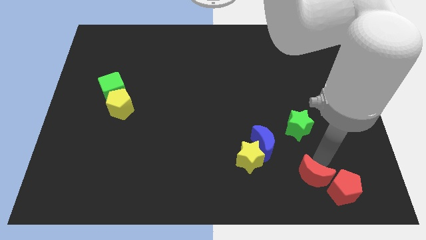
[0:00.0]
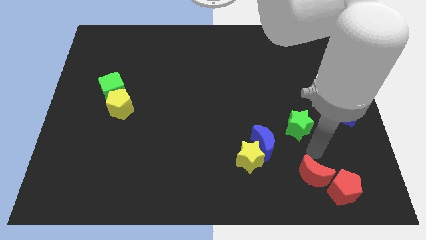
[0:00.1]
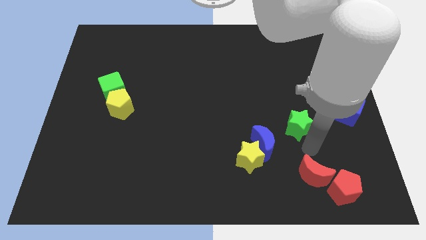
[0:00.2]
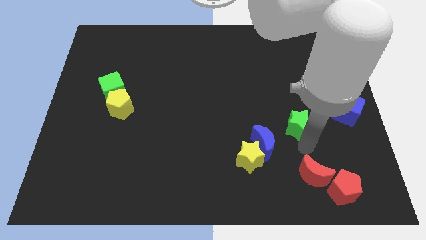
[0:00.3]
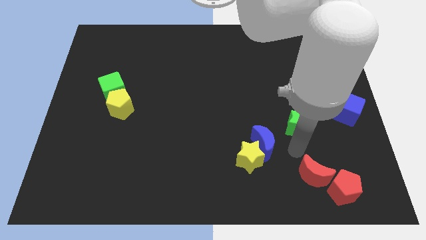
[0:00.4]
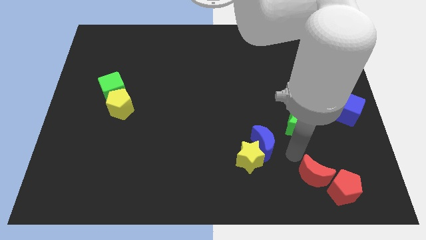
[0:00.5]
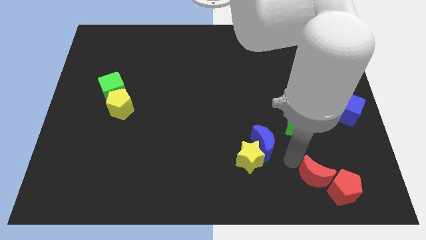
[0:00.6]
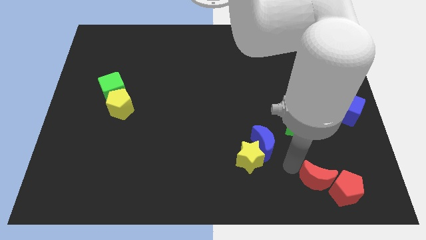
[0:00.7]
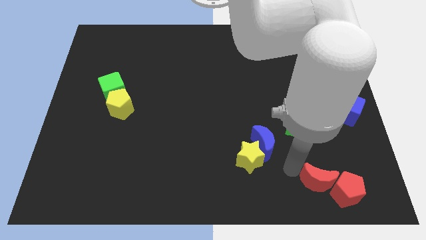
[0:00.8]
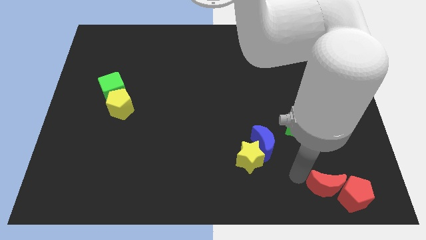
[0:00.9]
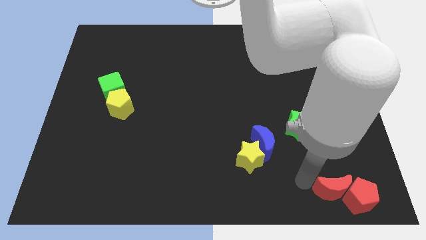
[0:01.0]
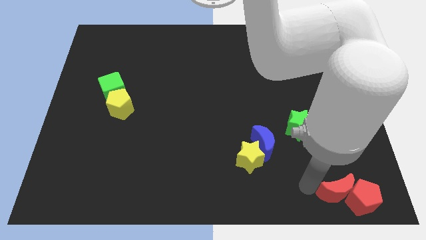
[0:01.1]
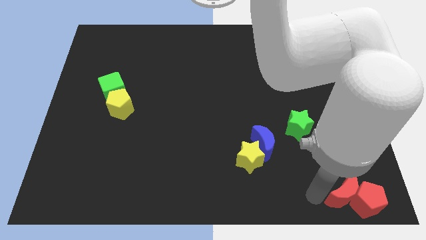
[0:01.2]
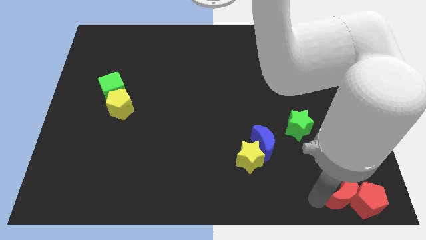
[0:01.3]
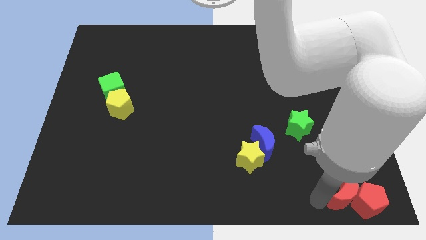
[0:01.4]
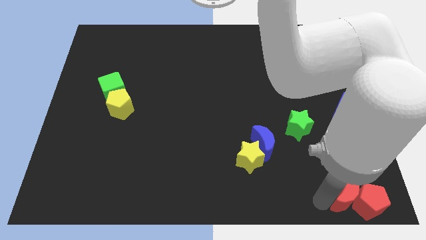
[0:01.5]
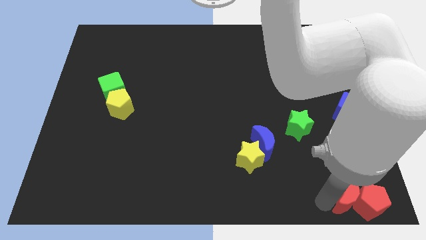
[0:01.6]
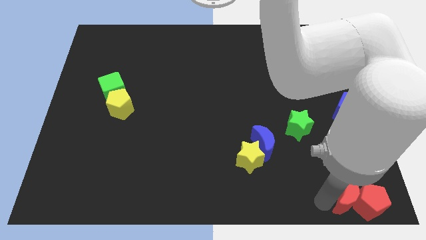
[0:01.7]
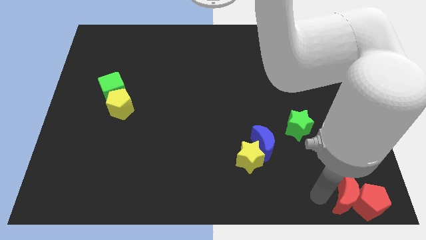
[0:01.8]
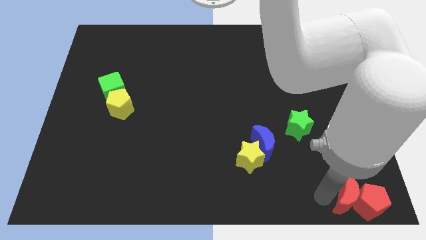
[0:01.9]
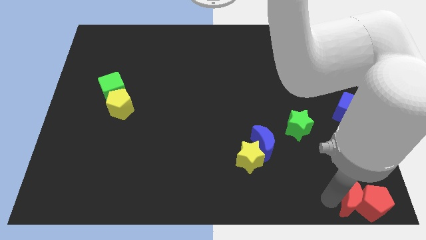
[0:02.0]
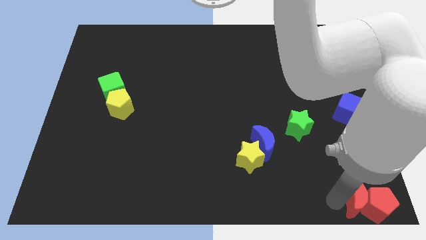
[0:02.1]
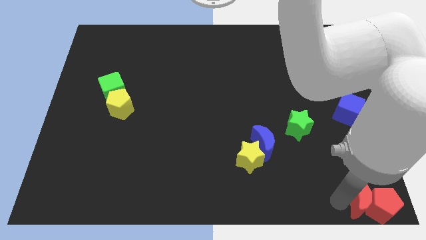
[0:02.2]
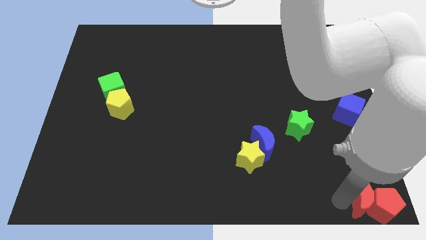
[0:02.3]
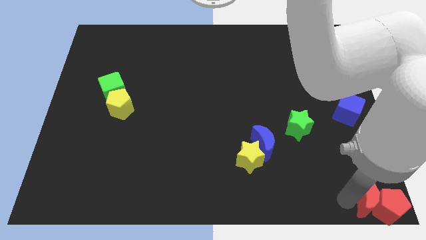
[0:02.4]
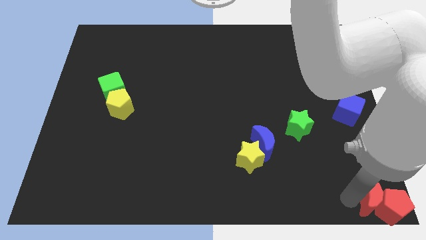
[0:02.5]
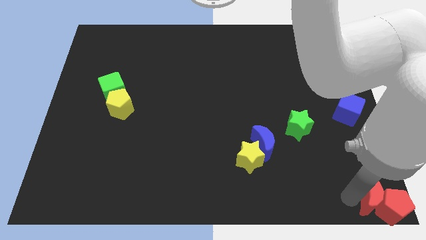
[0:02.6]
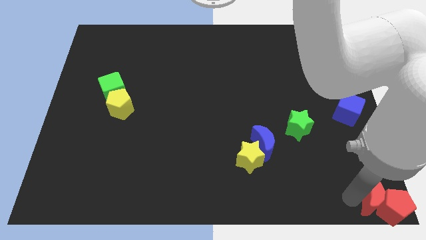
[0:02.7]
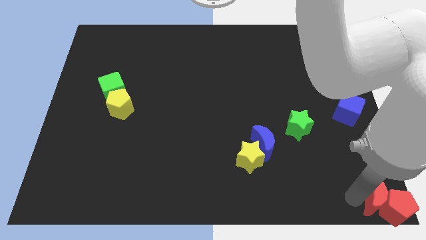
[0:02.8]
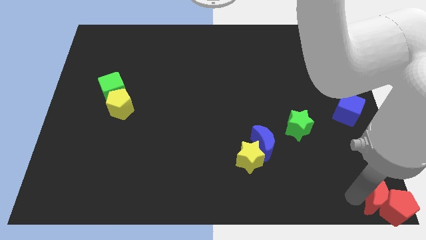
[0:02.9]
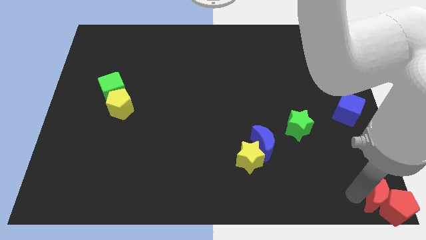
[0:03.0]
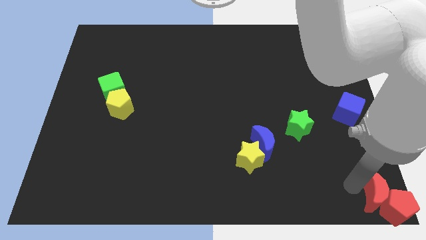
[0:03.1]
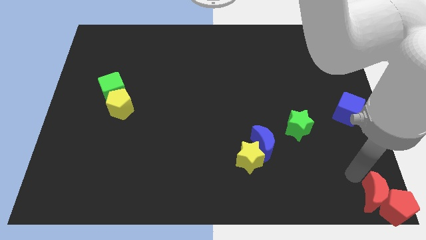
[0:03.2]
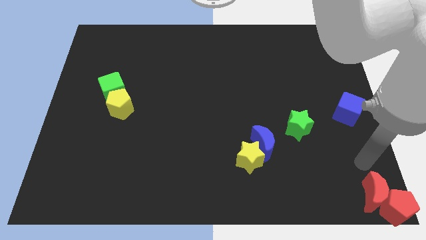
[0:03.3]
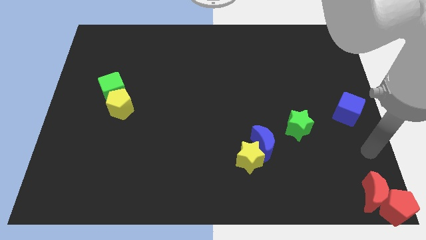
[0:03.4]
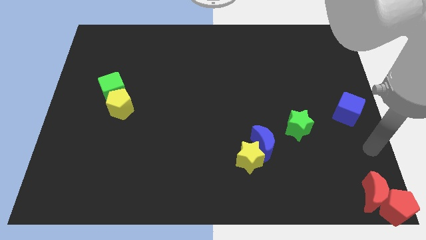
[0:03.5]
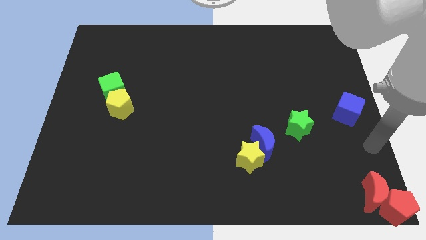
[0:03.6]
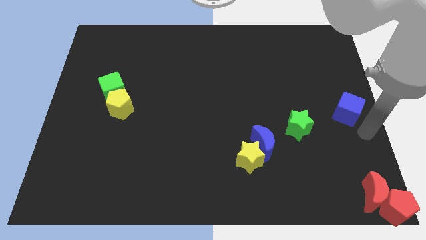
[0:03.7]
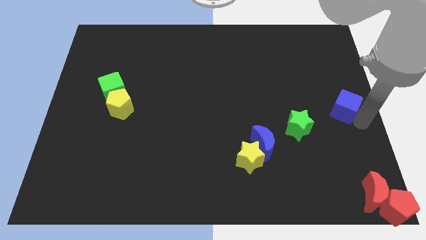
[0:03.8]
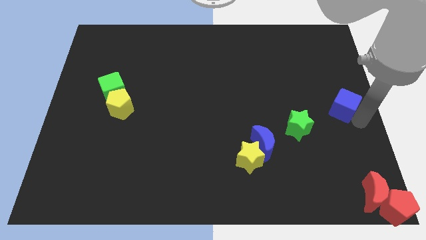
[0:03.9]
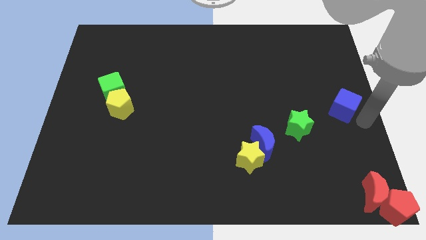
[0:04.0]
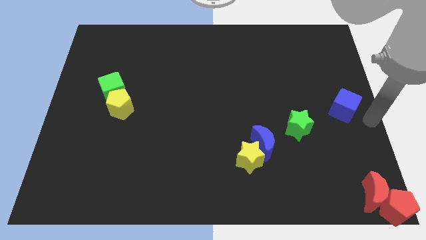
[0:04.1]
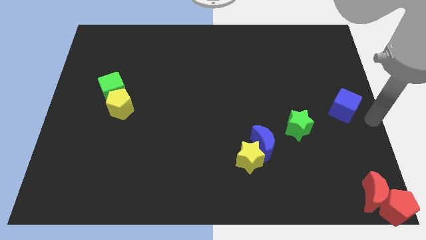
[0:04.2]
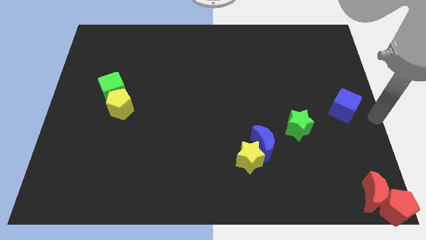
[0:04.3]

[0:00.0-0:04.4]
push the red crescent and red pentagon to the bottom right corner of the board

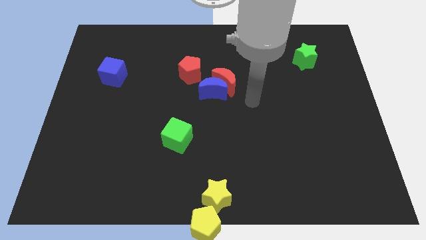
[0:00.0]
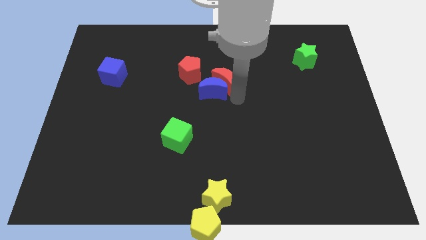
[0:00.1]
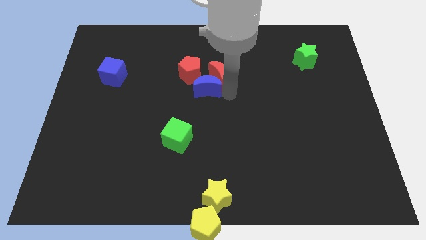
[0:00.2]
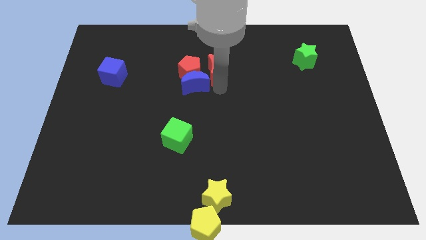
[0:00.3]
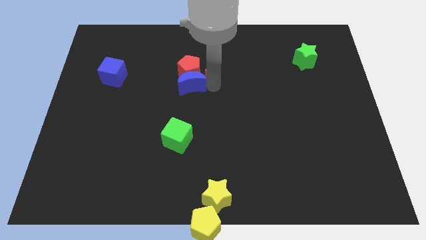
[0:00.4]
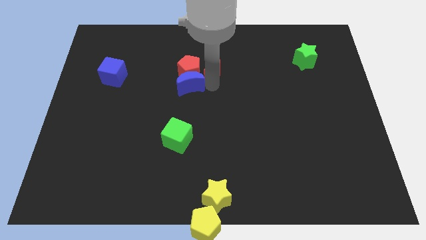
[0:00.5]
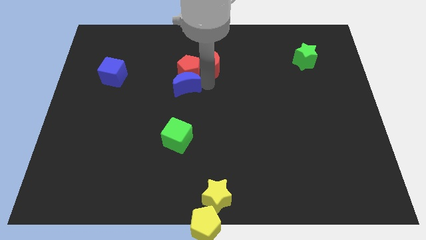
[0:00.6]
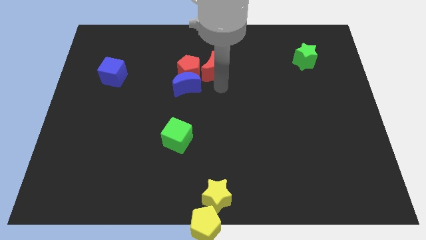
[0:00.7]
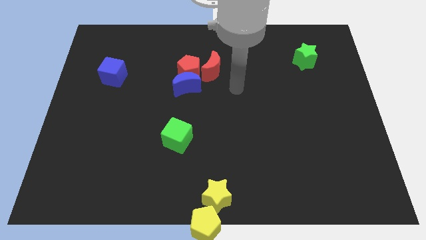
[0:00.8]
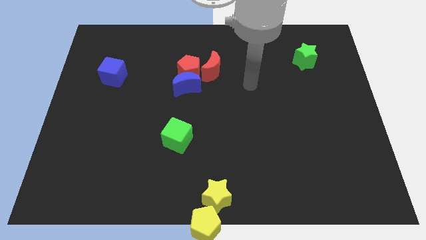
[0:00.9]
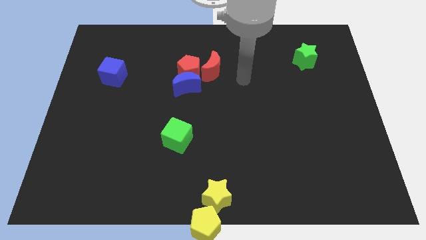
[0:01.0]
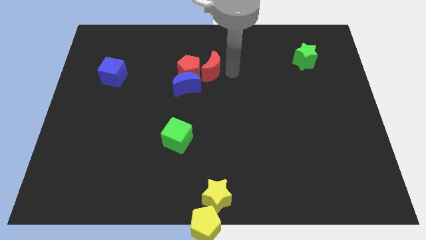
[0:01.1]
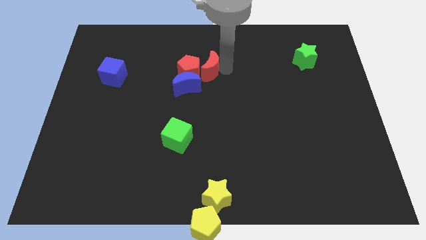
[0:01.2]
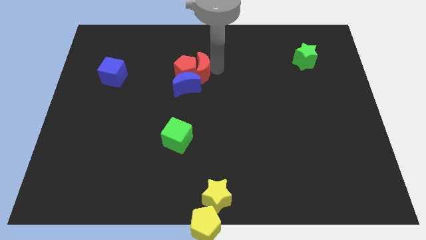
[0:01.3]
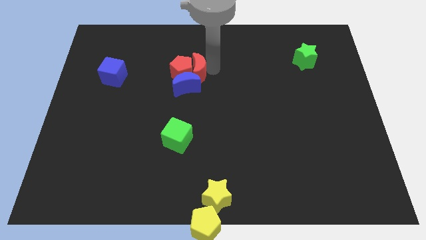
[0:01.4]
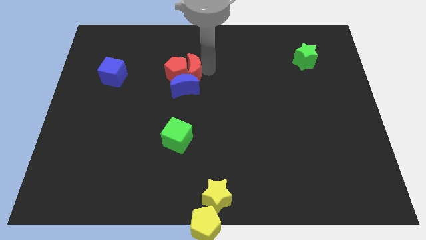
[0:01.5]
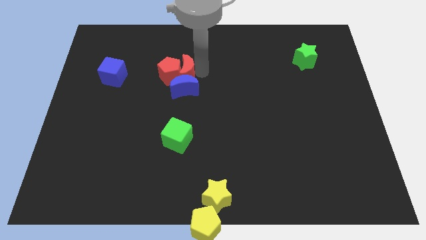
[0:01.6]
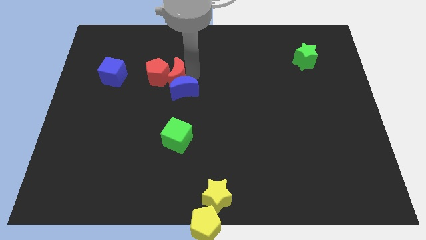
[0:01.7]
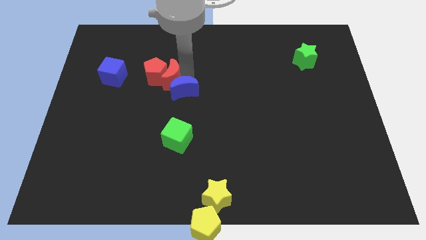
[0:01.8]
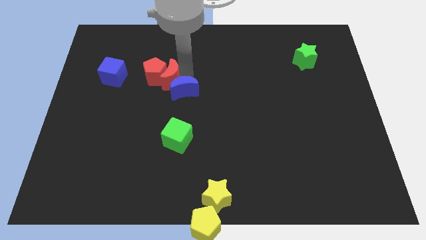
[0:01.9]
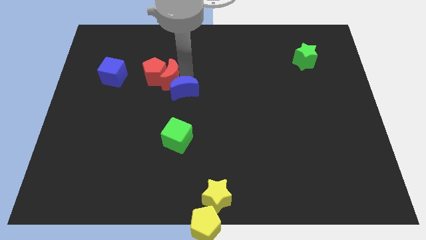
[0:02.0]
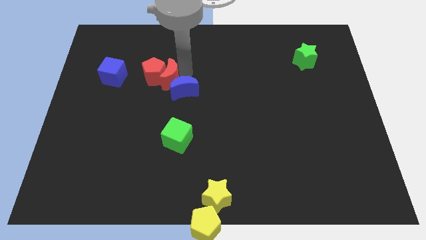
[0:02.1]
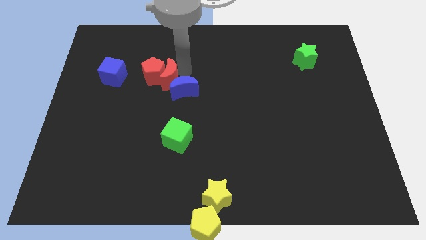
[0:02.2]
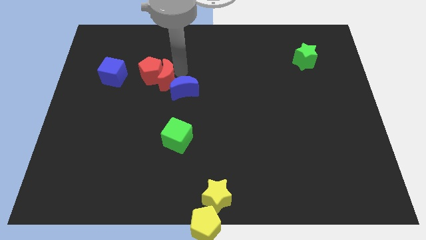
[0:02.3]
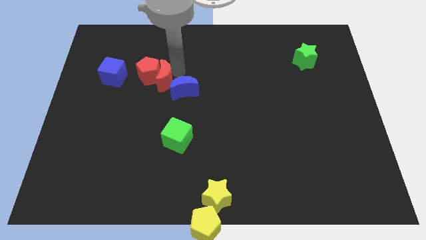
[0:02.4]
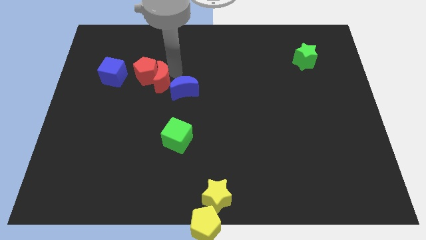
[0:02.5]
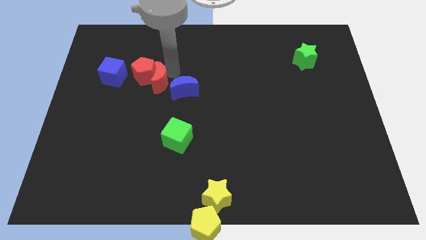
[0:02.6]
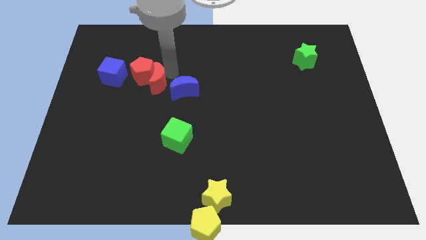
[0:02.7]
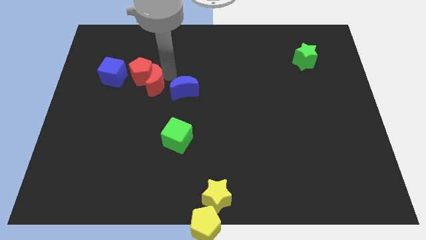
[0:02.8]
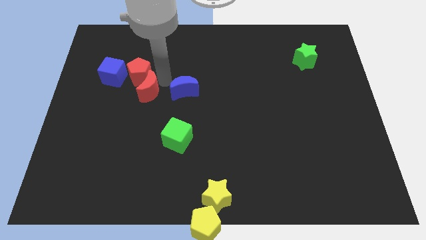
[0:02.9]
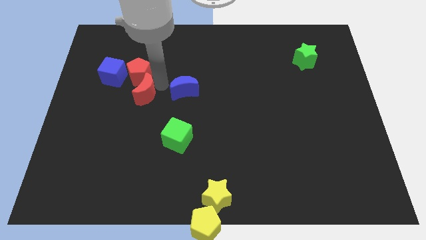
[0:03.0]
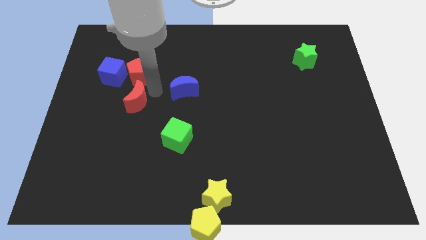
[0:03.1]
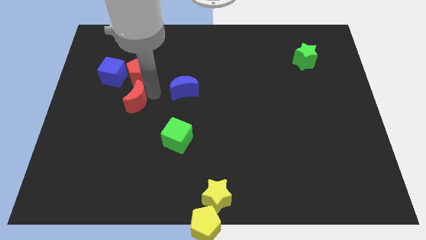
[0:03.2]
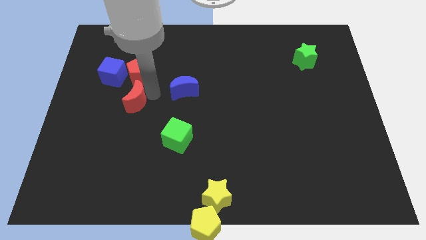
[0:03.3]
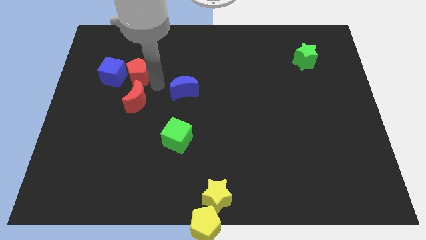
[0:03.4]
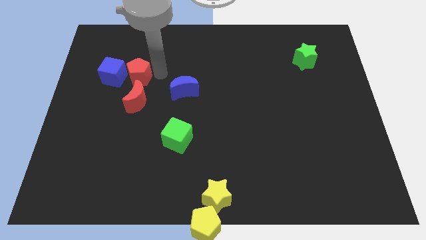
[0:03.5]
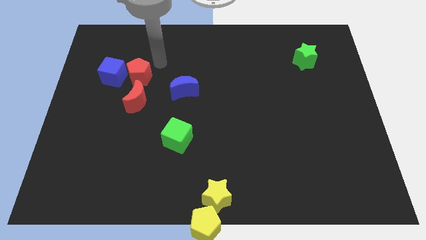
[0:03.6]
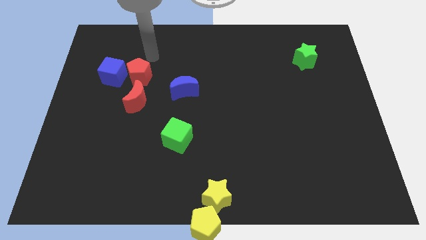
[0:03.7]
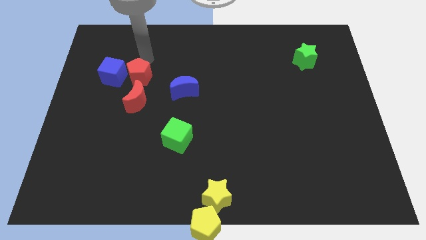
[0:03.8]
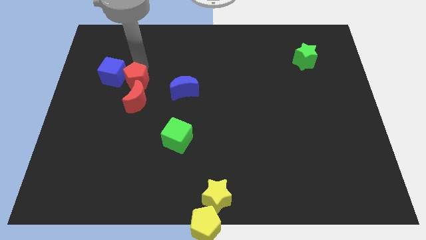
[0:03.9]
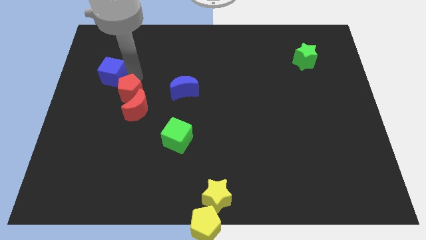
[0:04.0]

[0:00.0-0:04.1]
separate red color blocks from blue moon

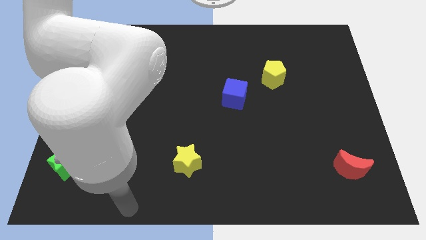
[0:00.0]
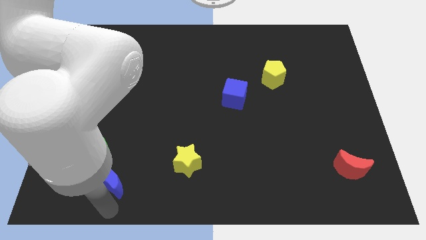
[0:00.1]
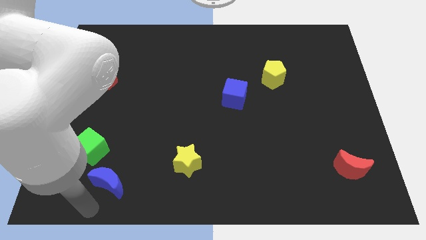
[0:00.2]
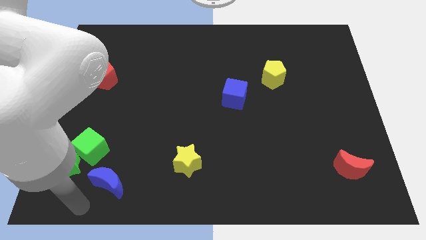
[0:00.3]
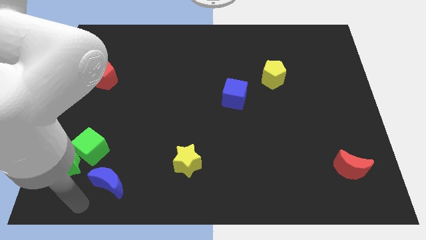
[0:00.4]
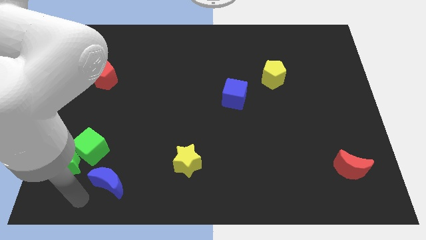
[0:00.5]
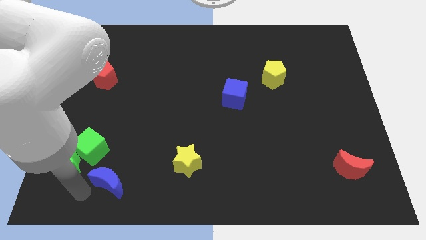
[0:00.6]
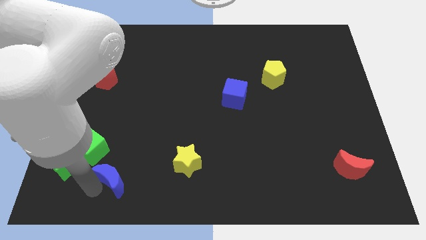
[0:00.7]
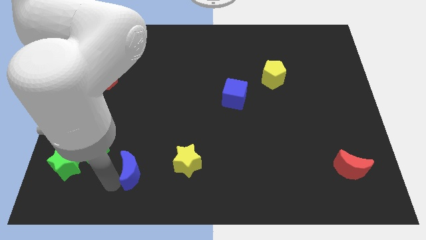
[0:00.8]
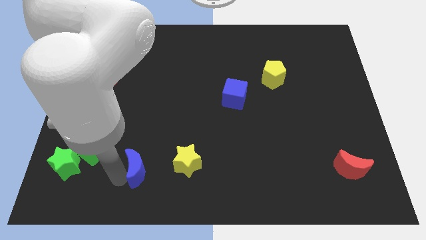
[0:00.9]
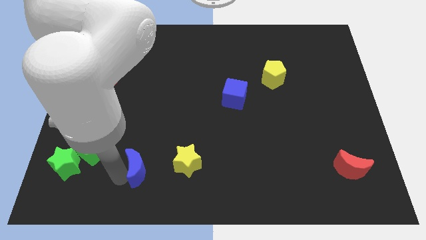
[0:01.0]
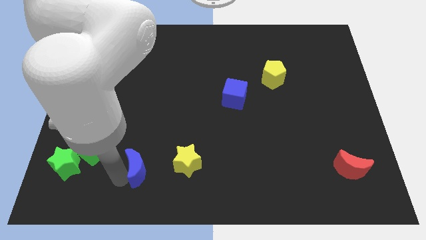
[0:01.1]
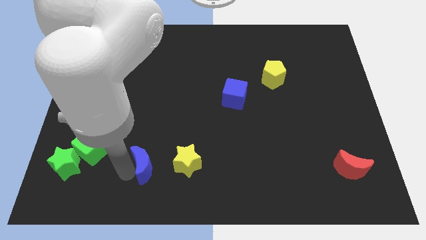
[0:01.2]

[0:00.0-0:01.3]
place the blue crescent horizontally to the left side of the yellow star
